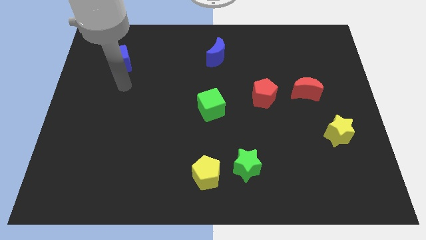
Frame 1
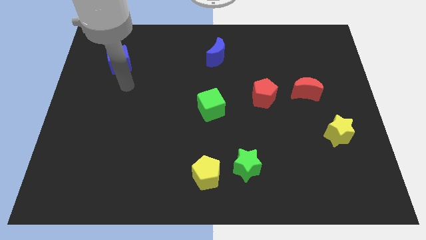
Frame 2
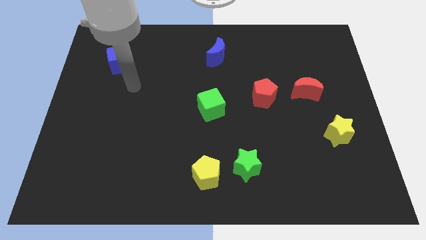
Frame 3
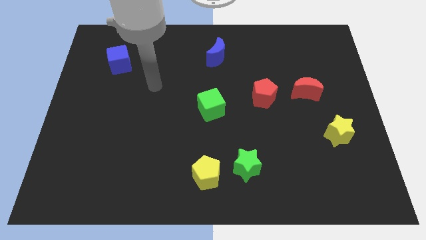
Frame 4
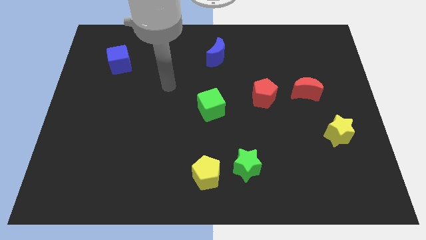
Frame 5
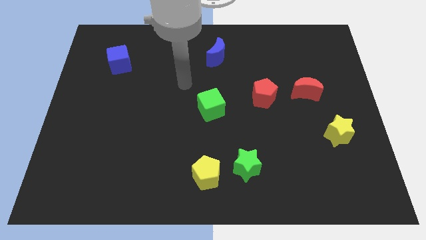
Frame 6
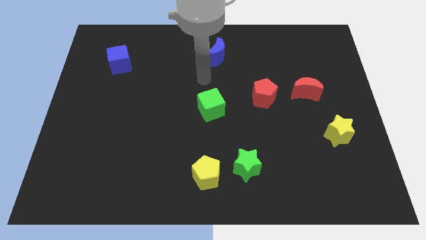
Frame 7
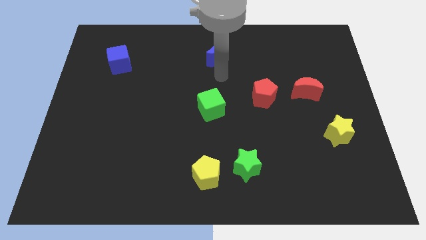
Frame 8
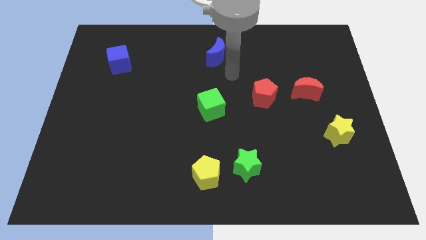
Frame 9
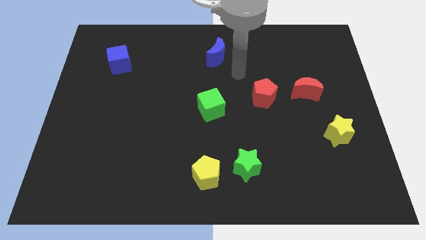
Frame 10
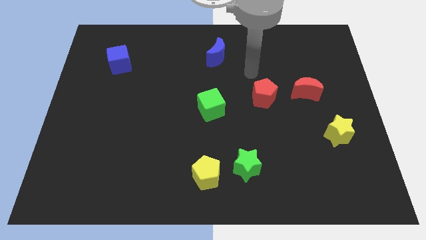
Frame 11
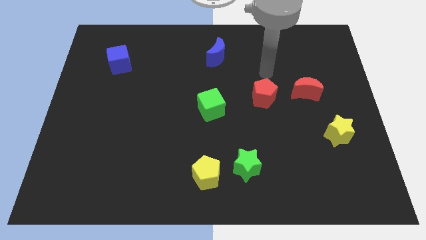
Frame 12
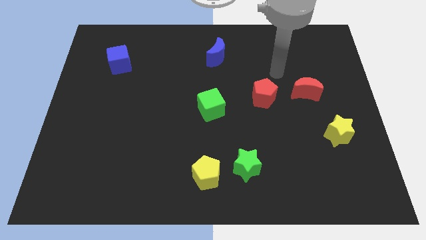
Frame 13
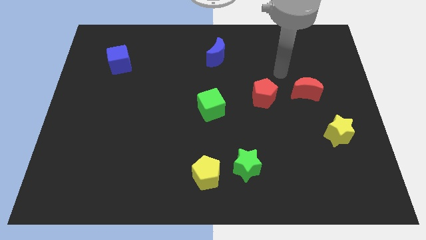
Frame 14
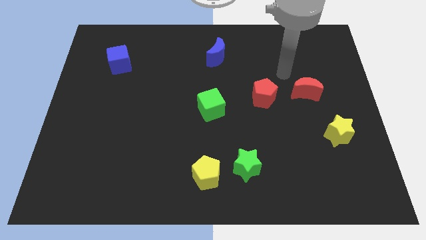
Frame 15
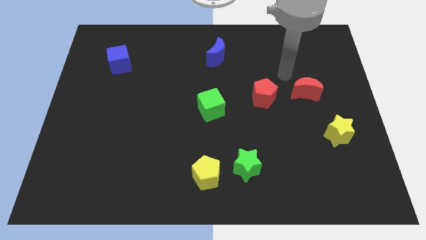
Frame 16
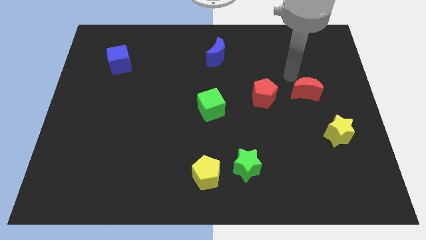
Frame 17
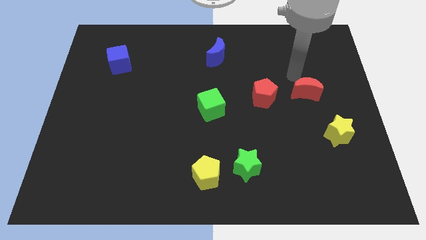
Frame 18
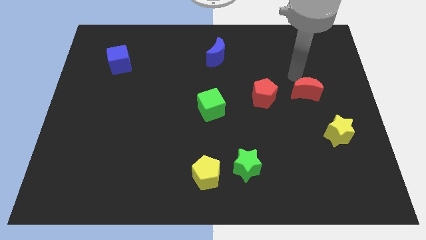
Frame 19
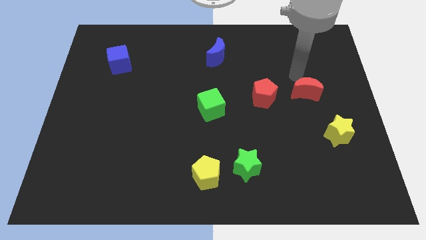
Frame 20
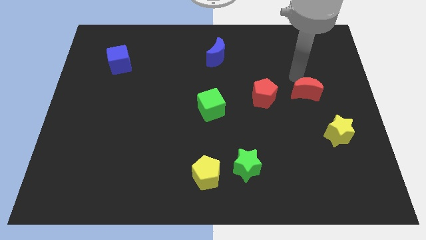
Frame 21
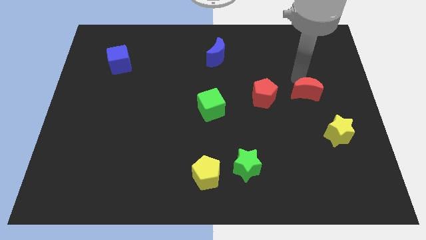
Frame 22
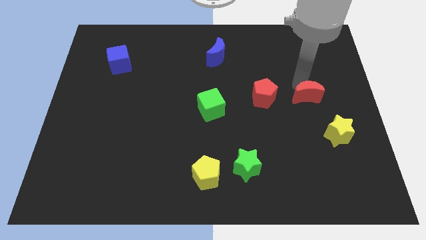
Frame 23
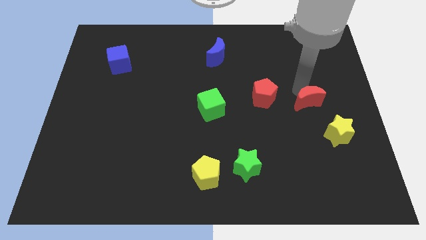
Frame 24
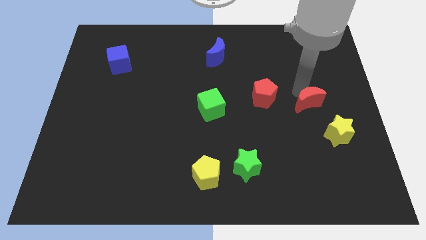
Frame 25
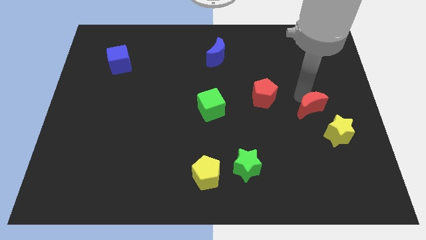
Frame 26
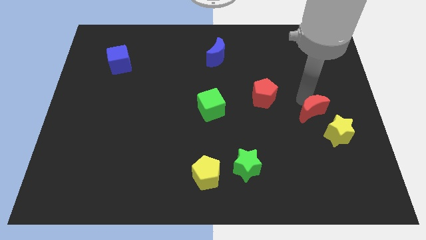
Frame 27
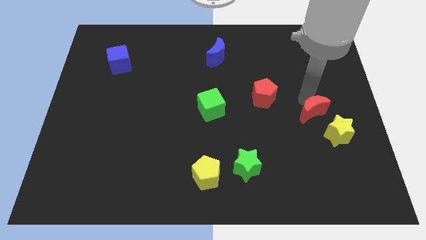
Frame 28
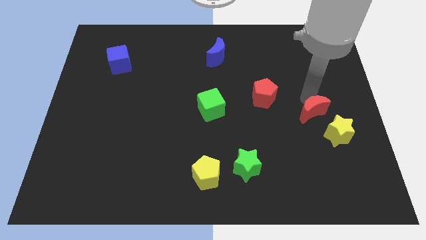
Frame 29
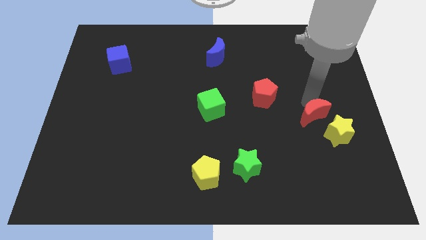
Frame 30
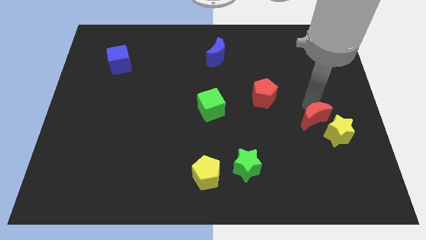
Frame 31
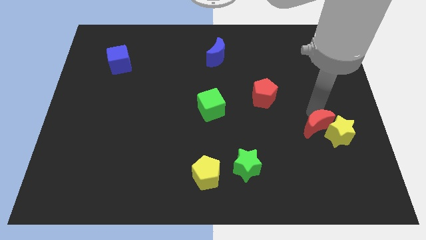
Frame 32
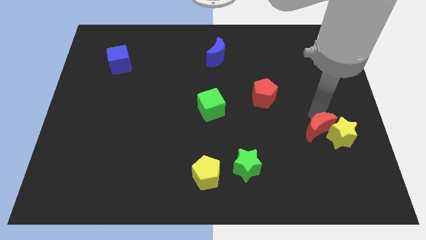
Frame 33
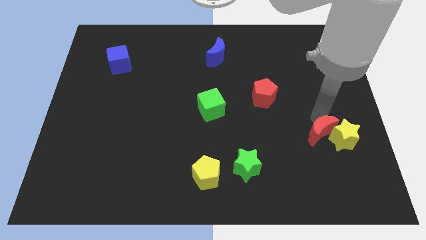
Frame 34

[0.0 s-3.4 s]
move the red moon towards the yellow star

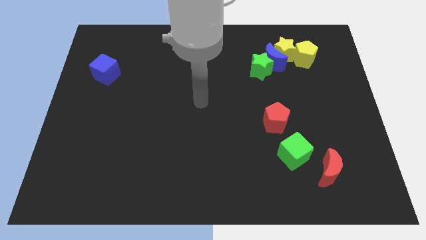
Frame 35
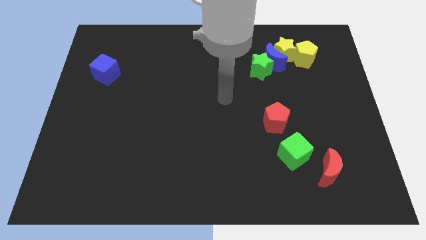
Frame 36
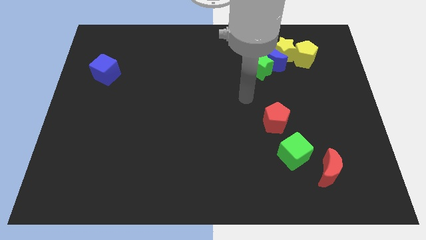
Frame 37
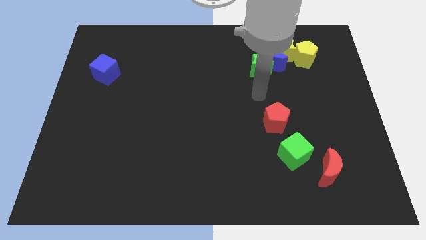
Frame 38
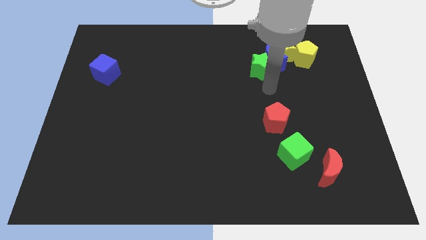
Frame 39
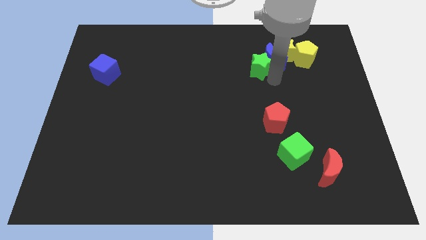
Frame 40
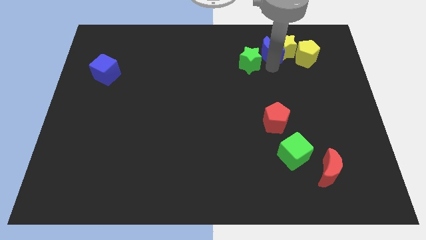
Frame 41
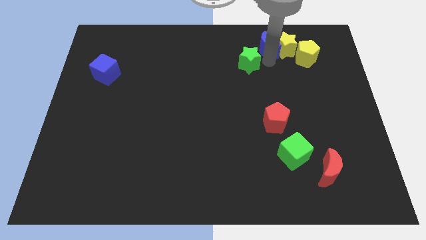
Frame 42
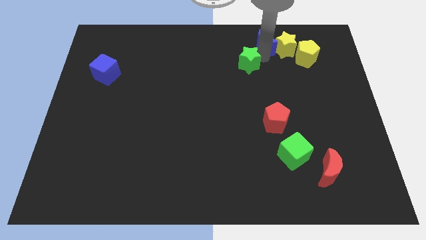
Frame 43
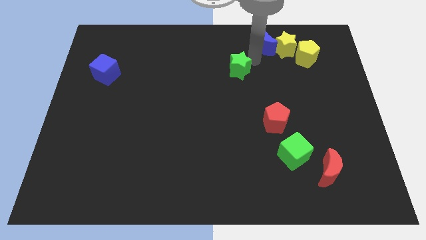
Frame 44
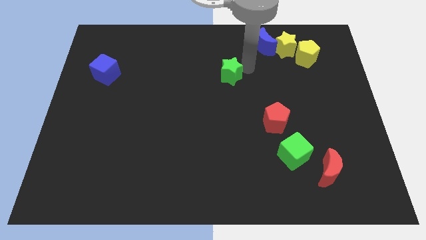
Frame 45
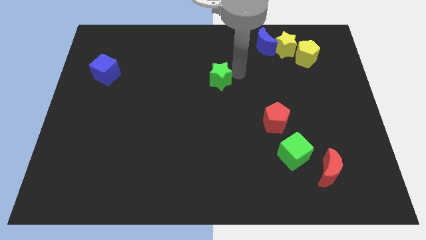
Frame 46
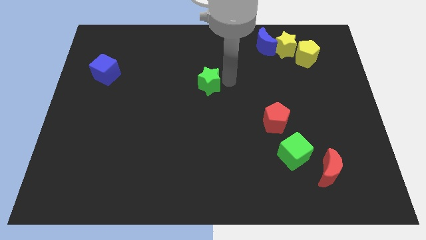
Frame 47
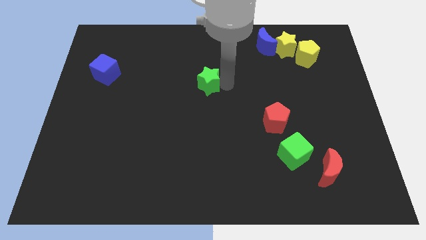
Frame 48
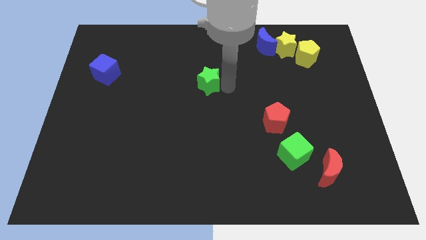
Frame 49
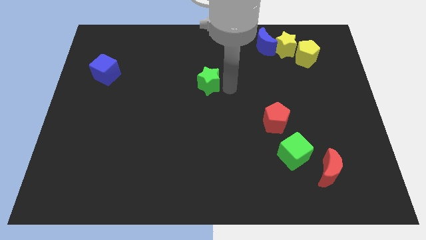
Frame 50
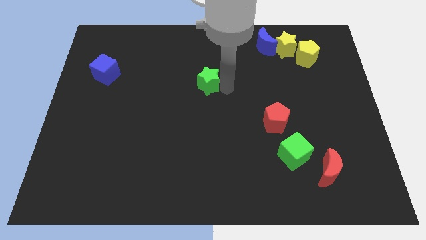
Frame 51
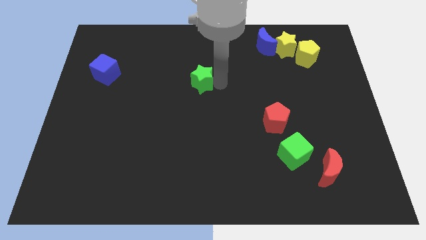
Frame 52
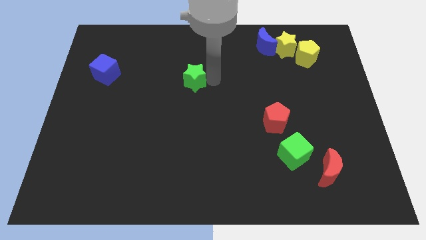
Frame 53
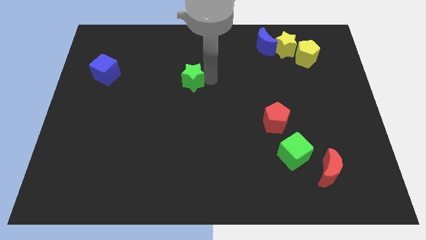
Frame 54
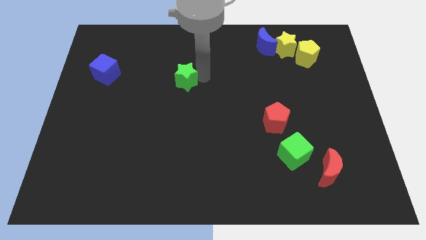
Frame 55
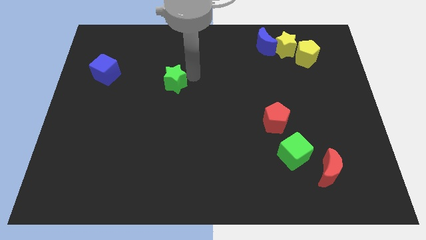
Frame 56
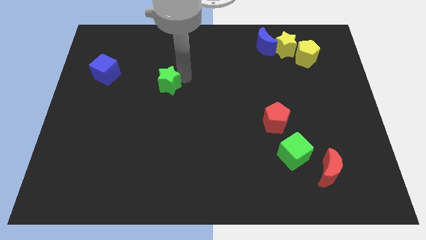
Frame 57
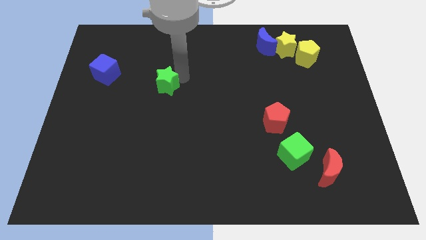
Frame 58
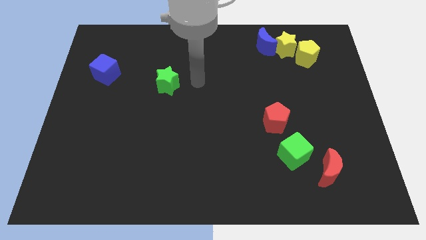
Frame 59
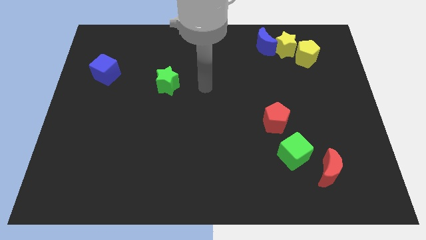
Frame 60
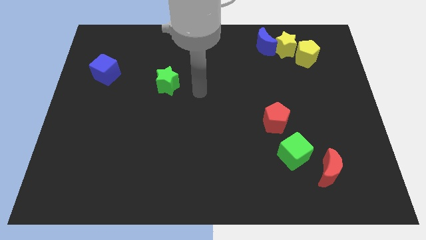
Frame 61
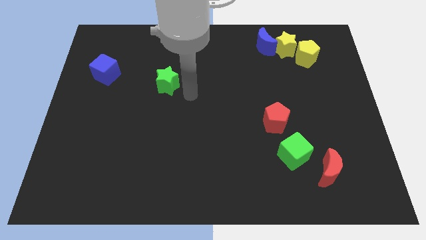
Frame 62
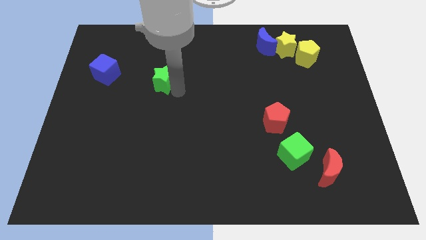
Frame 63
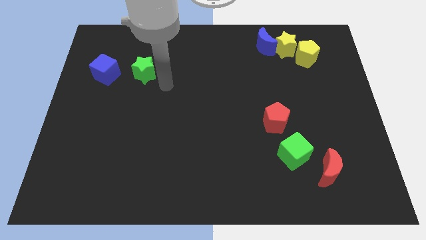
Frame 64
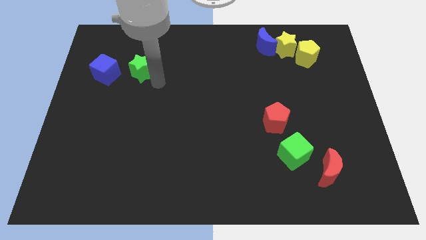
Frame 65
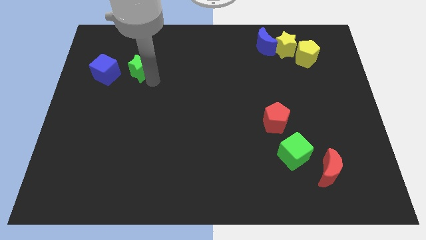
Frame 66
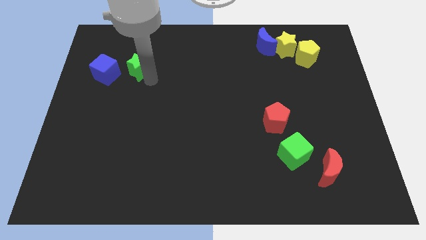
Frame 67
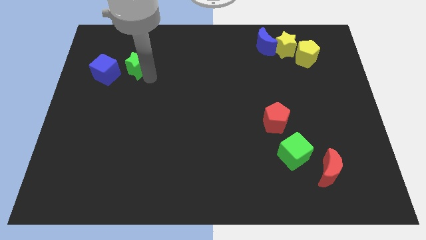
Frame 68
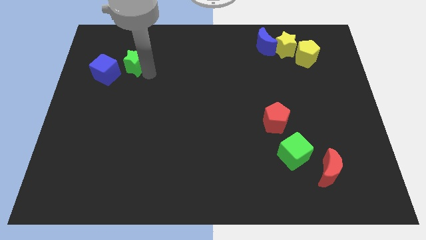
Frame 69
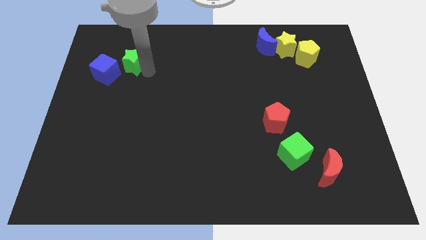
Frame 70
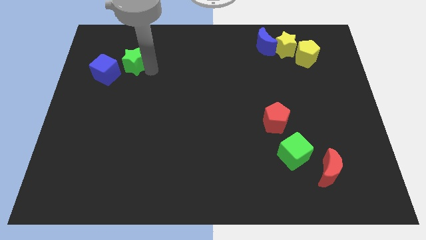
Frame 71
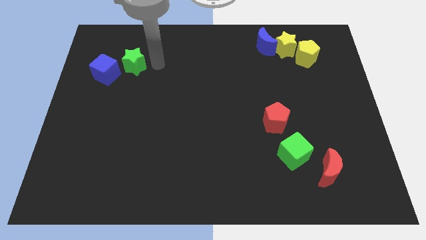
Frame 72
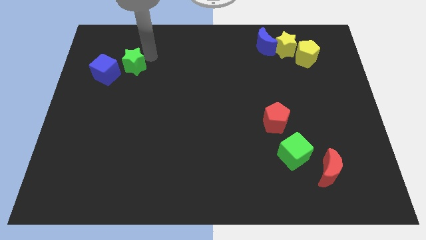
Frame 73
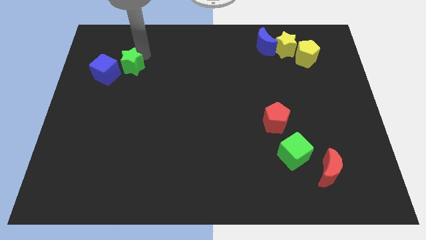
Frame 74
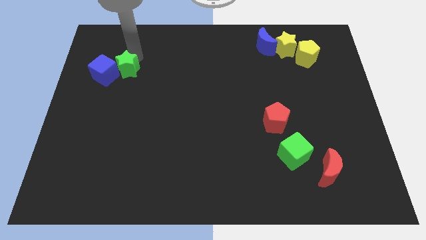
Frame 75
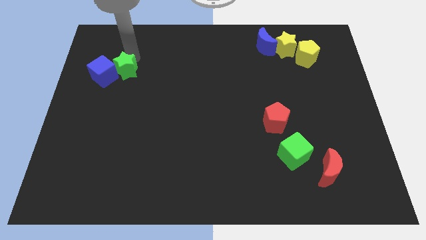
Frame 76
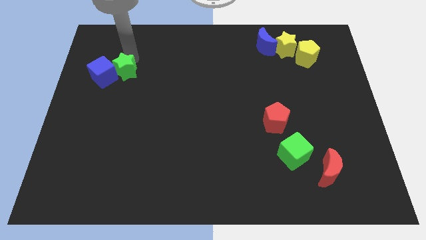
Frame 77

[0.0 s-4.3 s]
slide the green star towards the blue cube

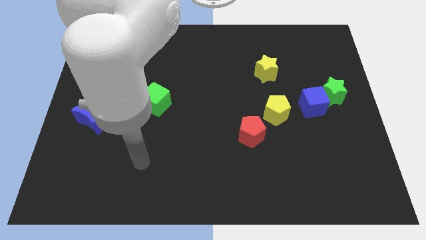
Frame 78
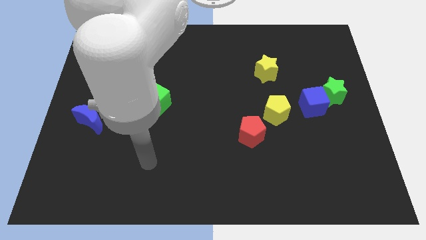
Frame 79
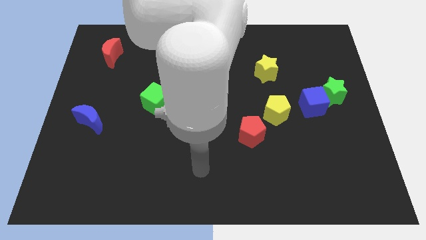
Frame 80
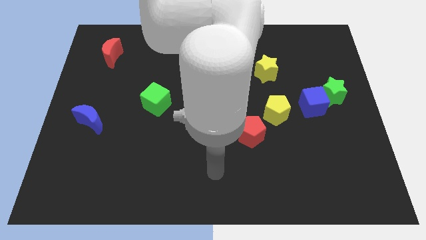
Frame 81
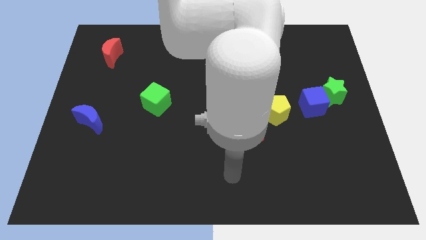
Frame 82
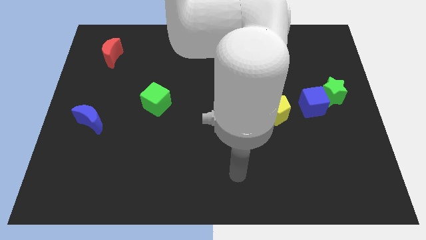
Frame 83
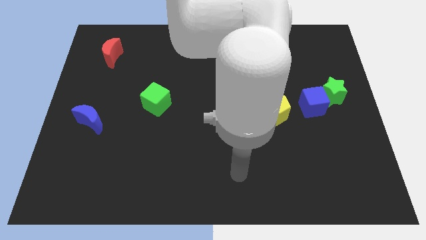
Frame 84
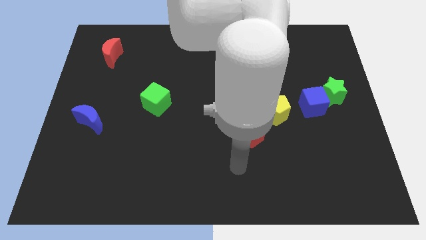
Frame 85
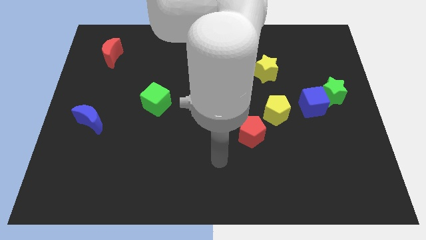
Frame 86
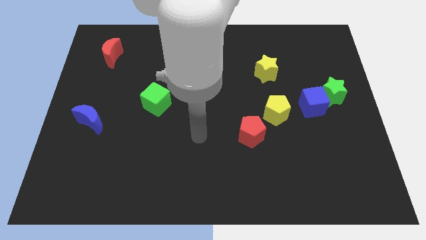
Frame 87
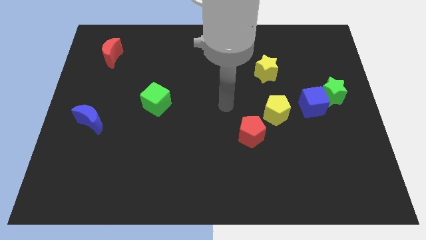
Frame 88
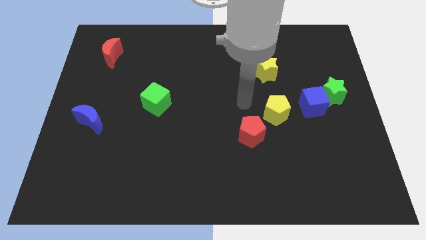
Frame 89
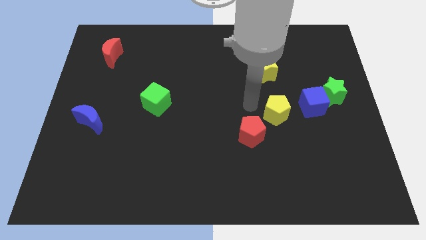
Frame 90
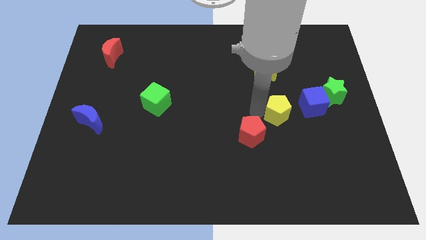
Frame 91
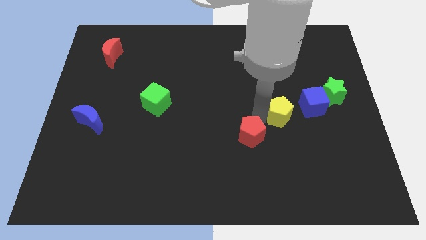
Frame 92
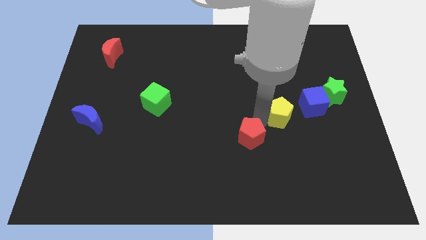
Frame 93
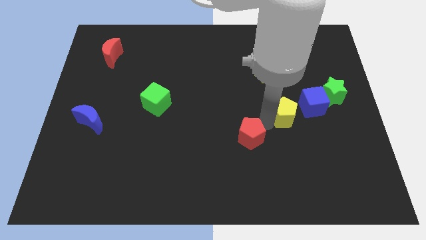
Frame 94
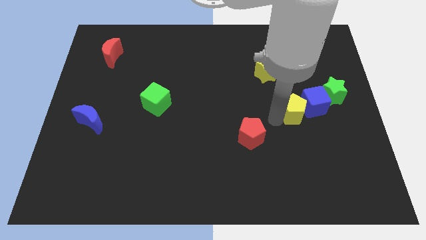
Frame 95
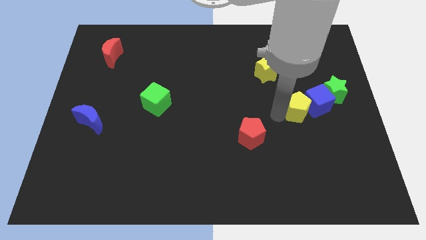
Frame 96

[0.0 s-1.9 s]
slide the yellow pentagon next to the blue cube
